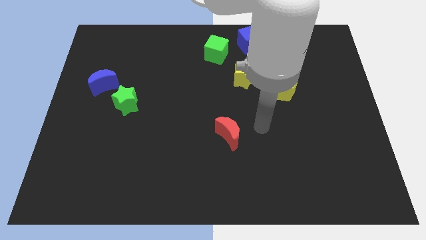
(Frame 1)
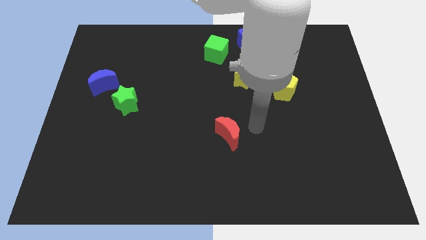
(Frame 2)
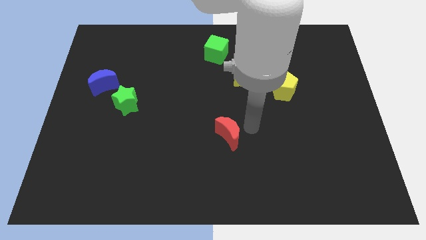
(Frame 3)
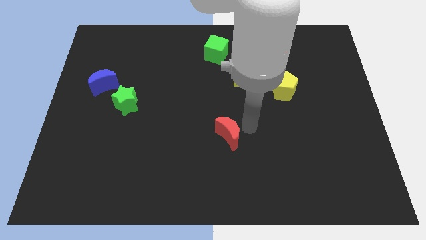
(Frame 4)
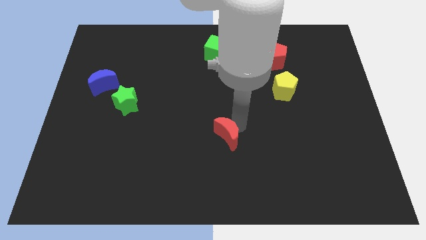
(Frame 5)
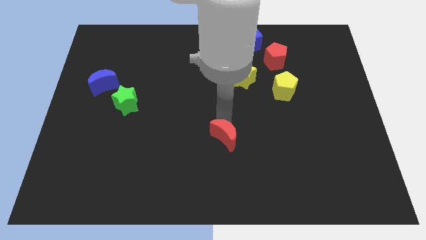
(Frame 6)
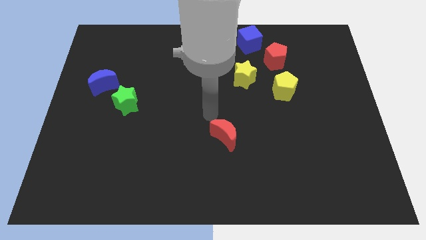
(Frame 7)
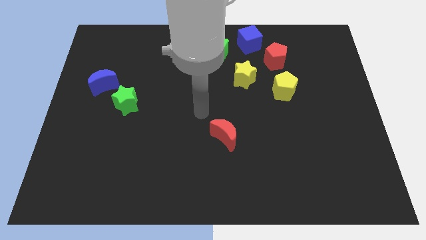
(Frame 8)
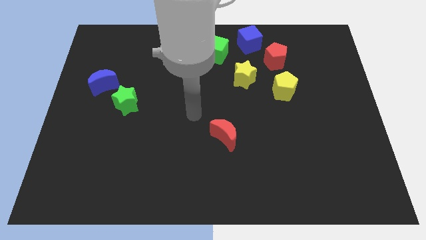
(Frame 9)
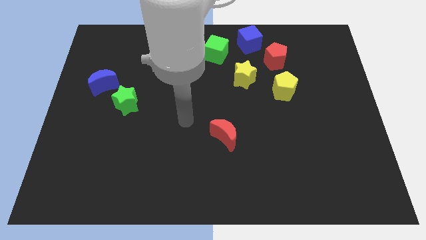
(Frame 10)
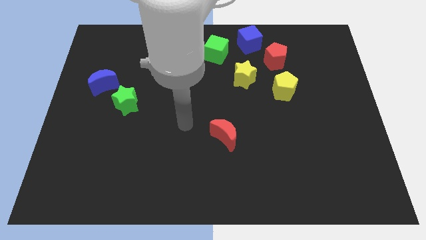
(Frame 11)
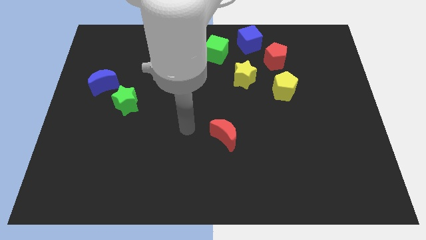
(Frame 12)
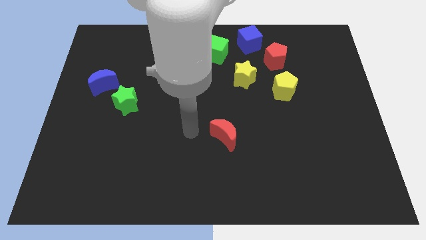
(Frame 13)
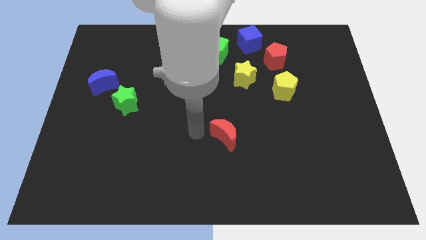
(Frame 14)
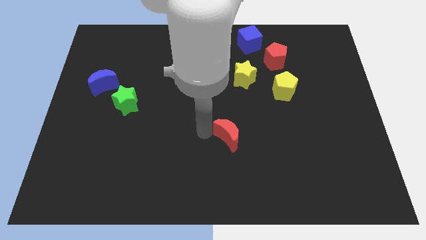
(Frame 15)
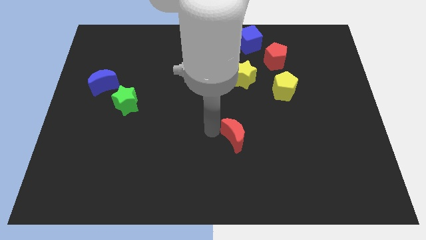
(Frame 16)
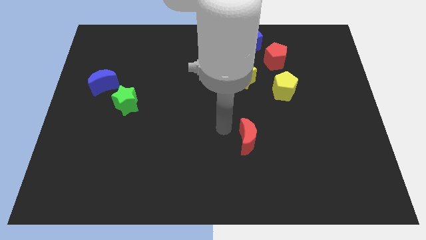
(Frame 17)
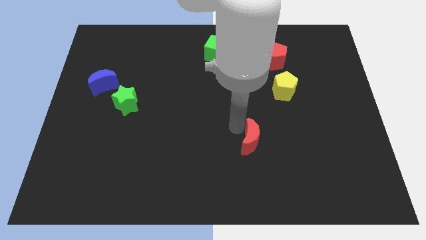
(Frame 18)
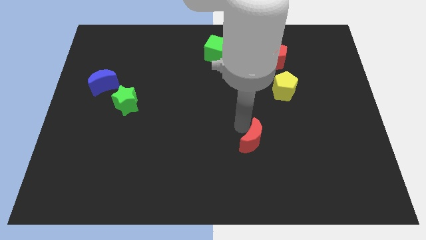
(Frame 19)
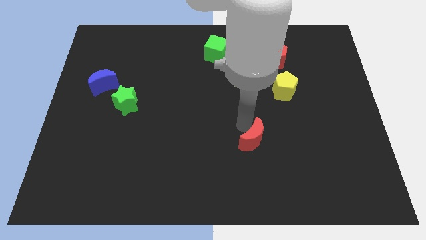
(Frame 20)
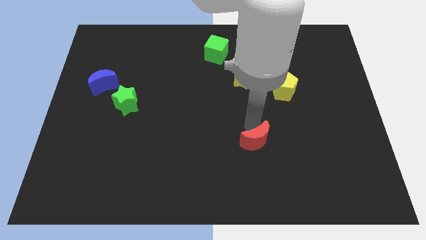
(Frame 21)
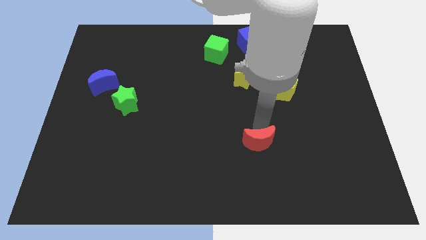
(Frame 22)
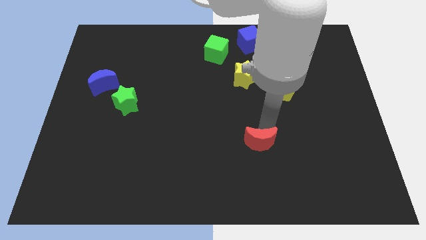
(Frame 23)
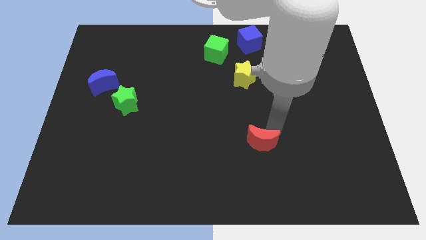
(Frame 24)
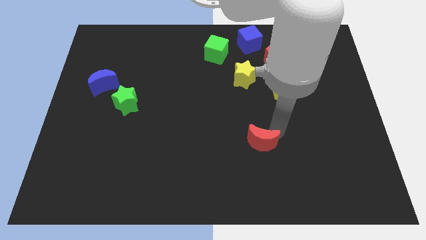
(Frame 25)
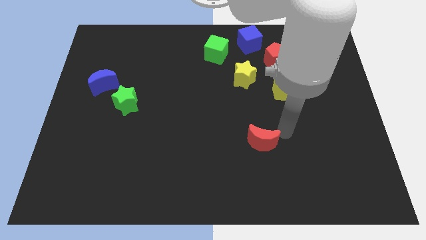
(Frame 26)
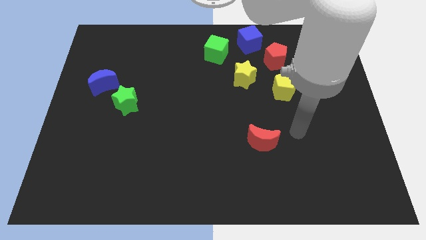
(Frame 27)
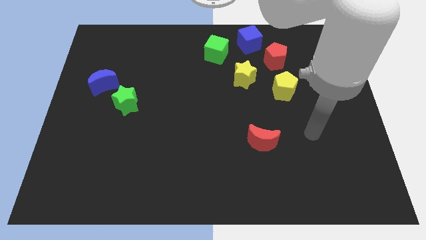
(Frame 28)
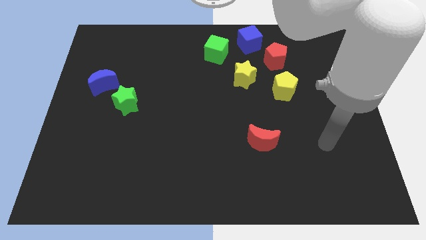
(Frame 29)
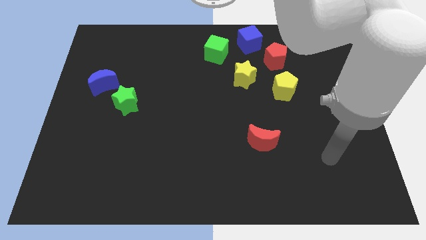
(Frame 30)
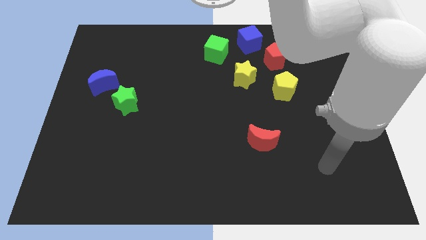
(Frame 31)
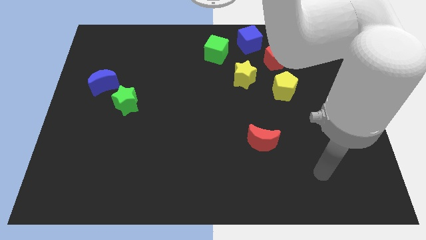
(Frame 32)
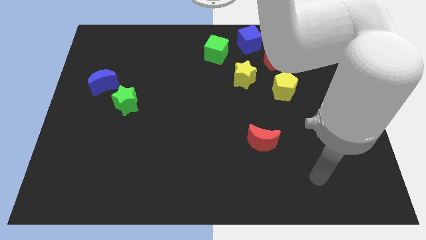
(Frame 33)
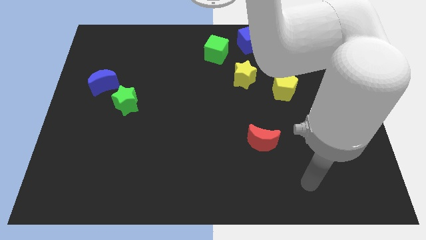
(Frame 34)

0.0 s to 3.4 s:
place the red moon below the yellow blocks

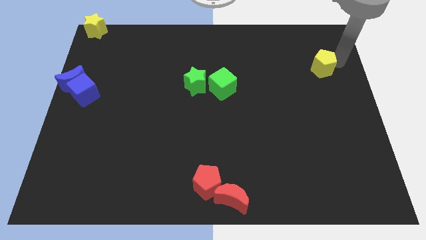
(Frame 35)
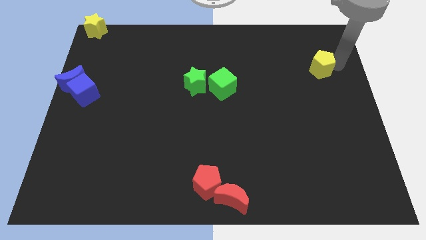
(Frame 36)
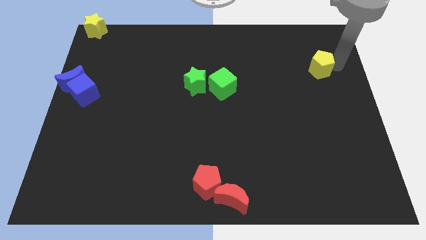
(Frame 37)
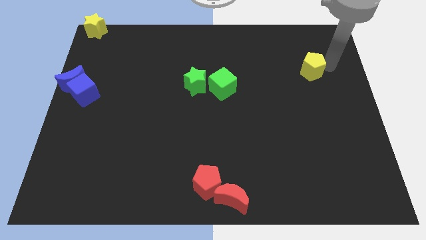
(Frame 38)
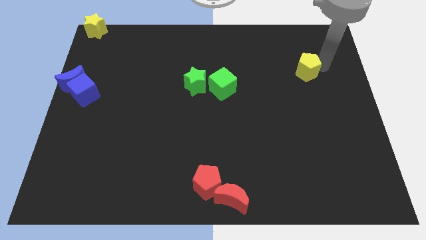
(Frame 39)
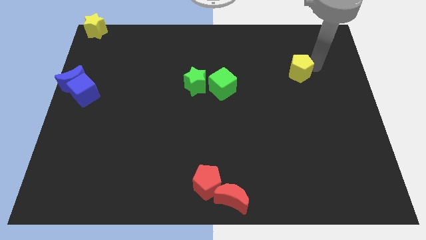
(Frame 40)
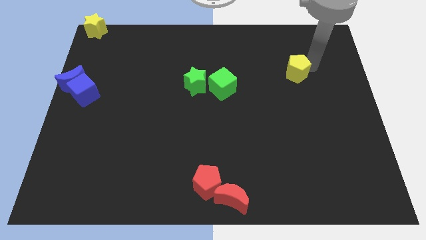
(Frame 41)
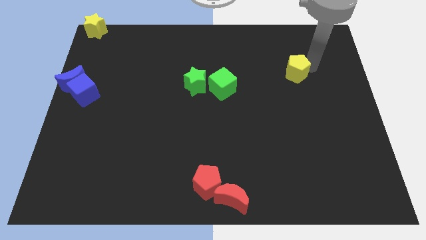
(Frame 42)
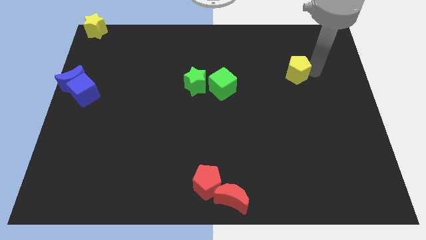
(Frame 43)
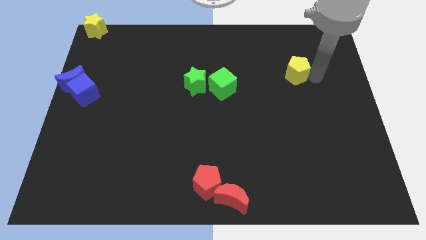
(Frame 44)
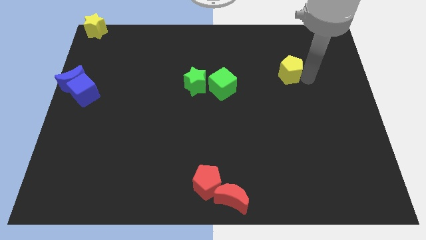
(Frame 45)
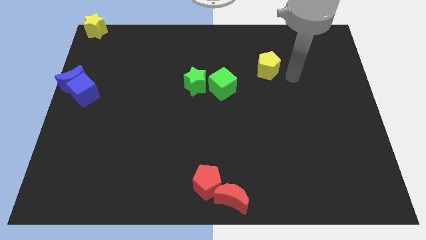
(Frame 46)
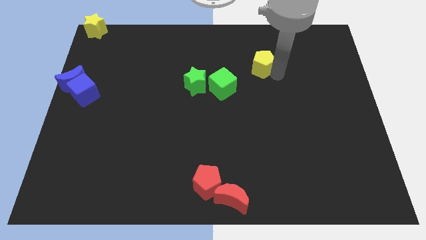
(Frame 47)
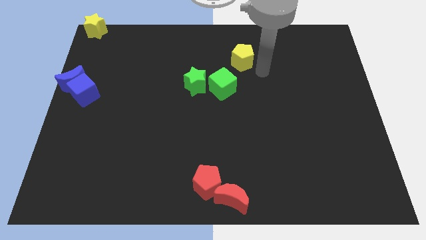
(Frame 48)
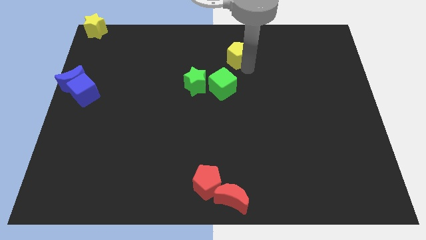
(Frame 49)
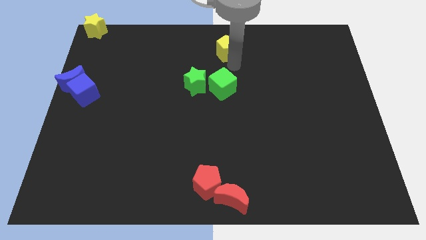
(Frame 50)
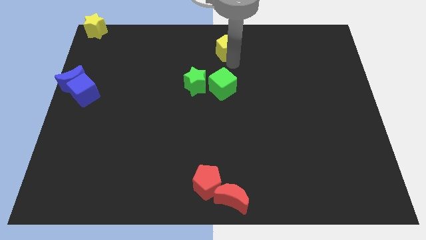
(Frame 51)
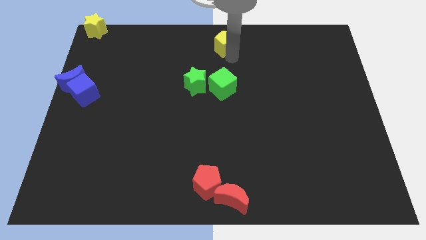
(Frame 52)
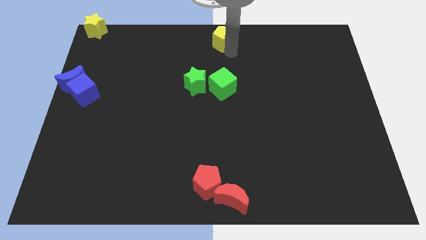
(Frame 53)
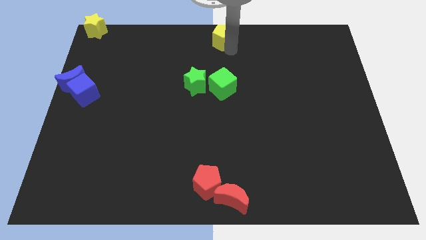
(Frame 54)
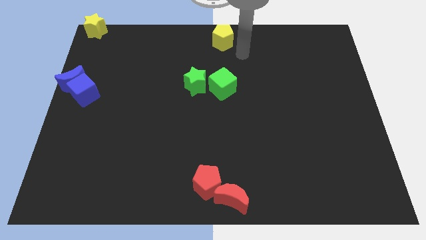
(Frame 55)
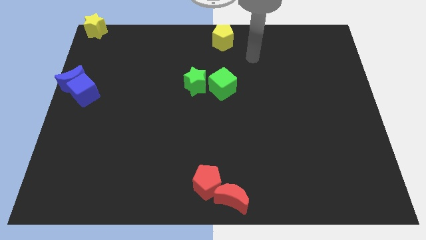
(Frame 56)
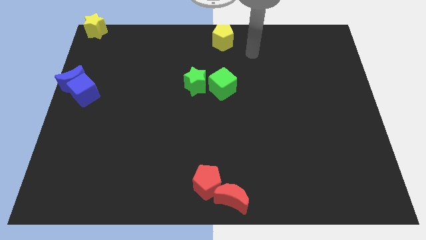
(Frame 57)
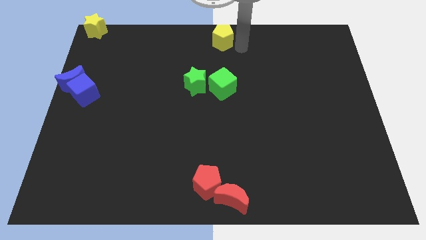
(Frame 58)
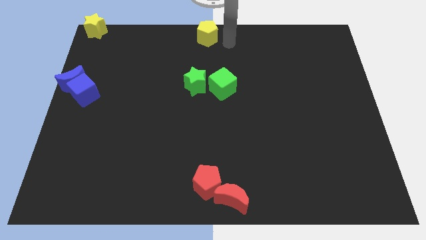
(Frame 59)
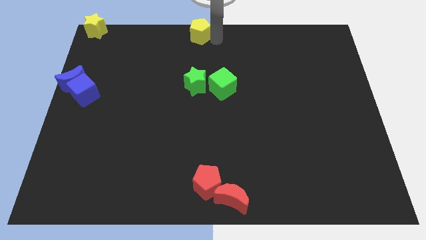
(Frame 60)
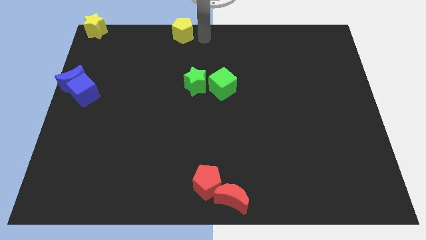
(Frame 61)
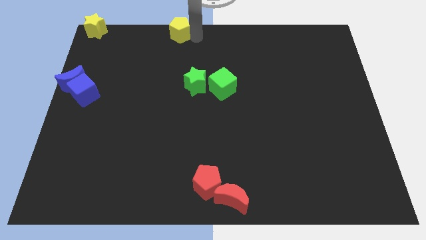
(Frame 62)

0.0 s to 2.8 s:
move the yellow pentagon towards the top center of the board

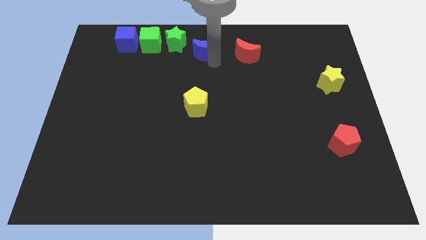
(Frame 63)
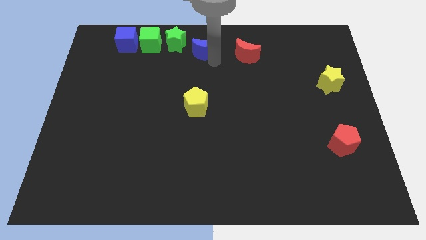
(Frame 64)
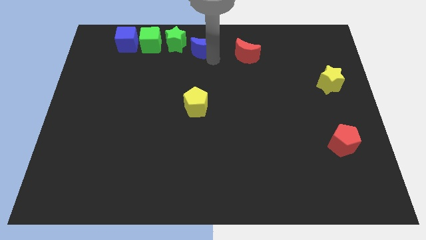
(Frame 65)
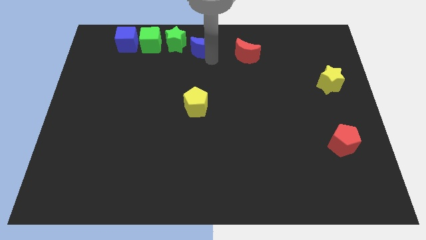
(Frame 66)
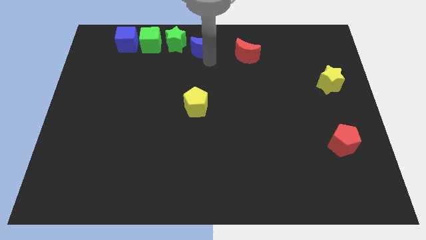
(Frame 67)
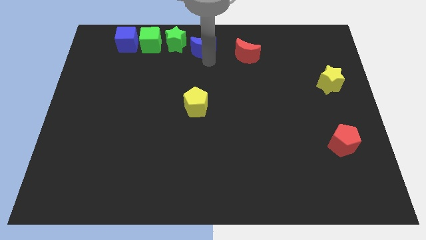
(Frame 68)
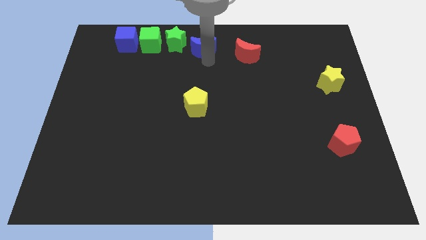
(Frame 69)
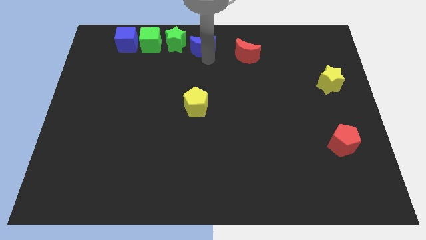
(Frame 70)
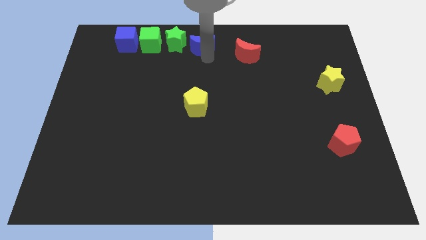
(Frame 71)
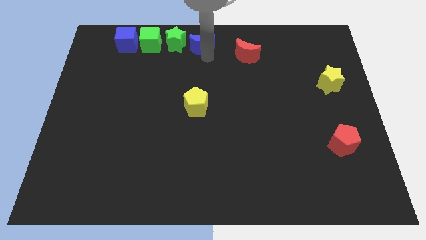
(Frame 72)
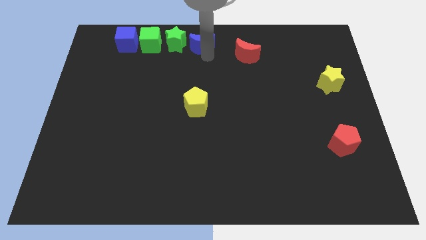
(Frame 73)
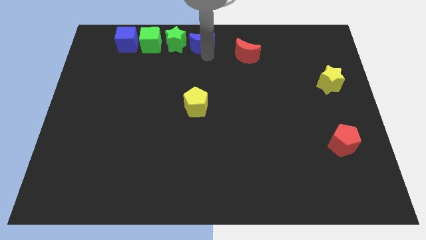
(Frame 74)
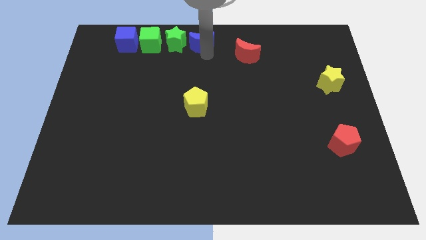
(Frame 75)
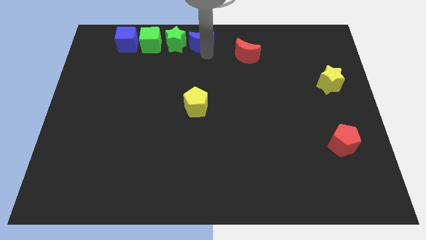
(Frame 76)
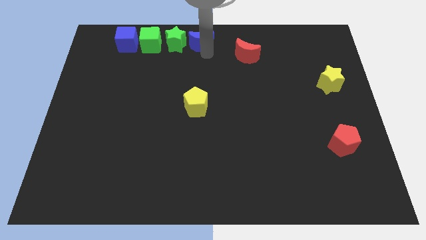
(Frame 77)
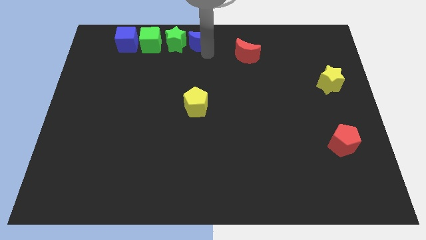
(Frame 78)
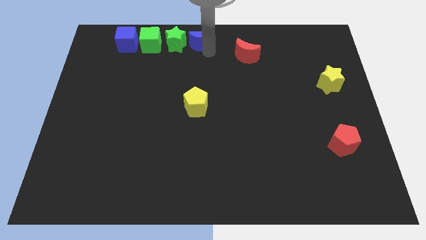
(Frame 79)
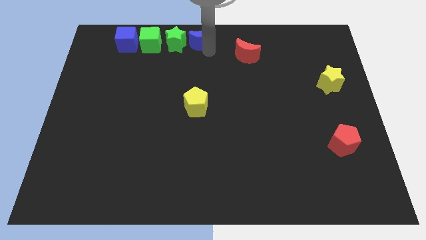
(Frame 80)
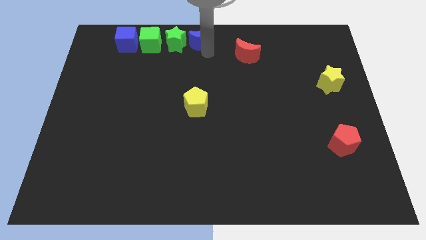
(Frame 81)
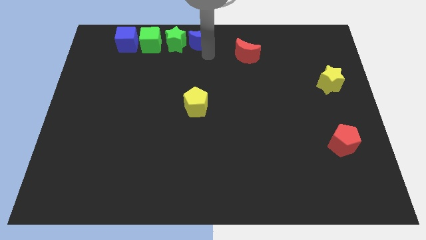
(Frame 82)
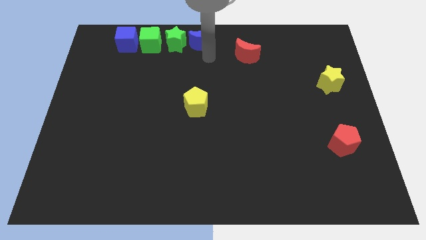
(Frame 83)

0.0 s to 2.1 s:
push blue moon to the top center

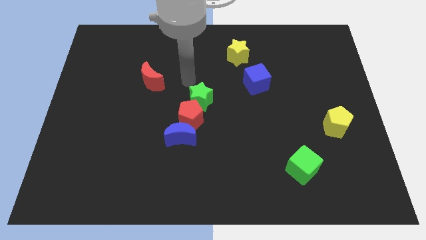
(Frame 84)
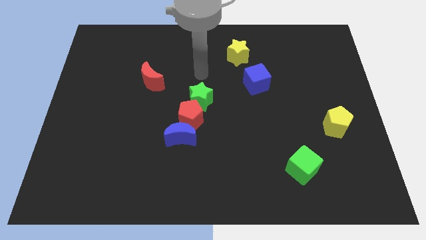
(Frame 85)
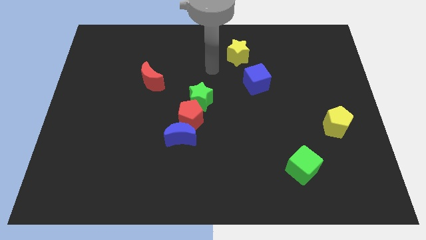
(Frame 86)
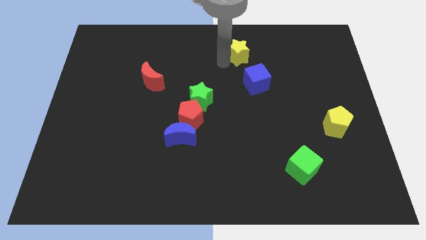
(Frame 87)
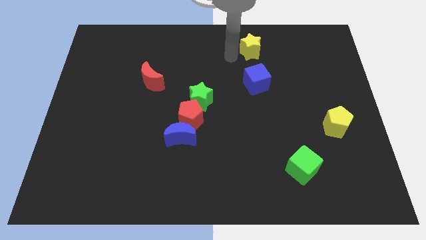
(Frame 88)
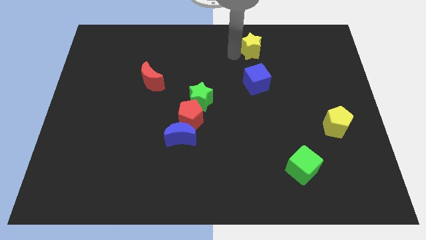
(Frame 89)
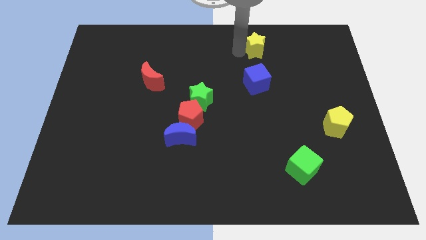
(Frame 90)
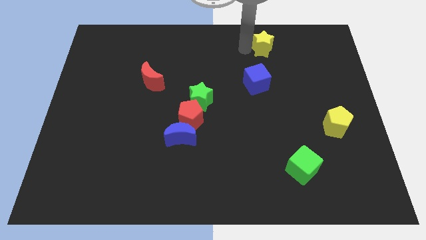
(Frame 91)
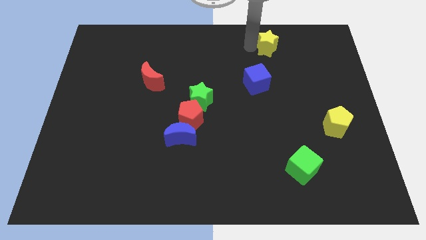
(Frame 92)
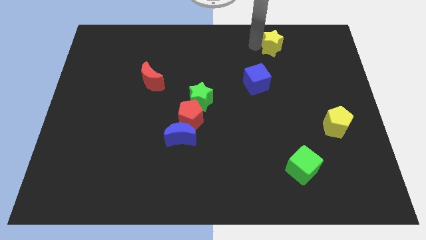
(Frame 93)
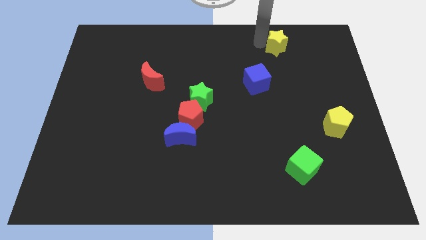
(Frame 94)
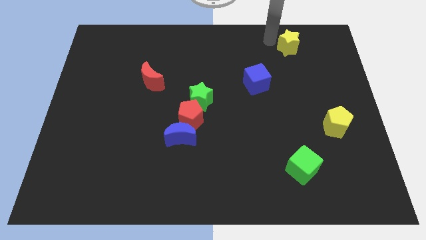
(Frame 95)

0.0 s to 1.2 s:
push the yellow star slightly towards right corner of the board
